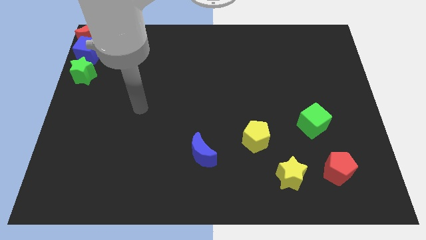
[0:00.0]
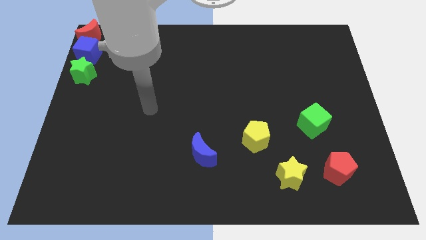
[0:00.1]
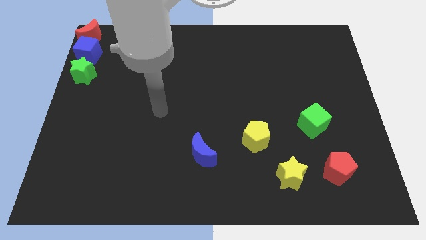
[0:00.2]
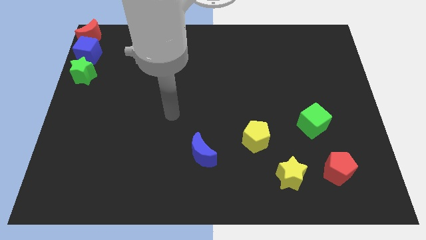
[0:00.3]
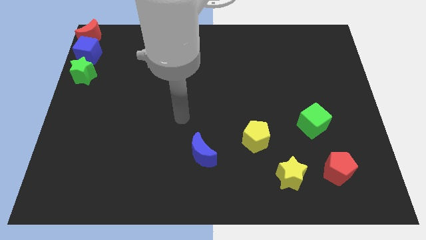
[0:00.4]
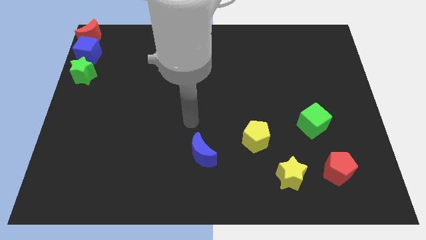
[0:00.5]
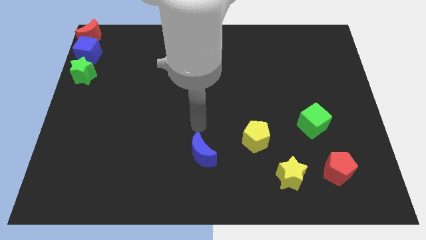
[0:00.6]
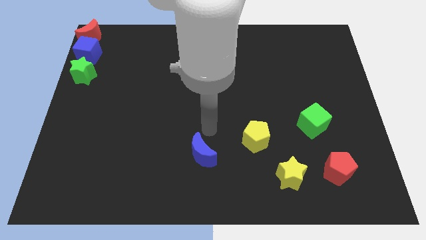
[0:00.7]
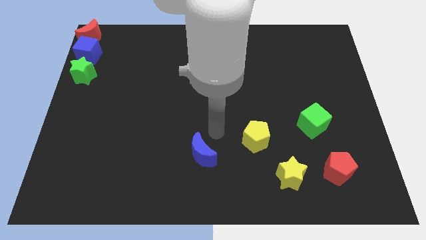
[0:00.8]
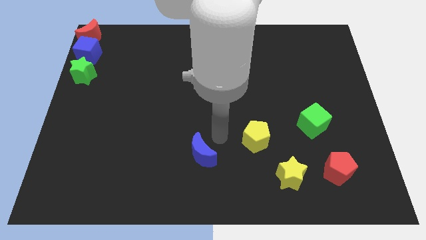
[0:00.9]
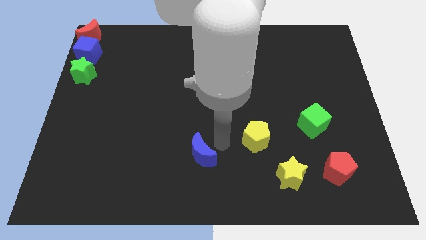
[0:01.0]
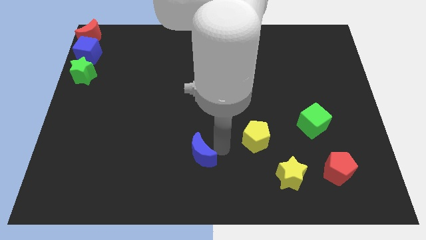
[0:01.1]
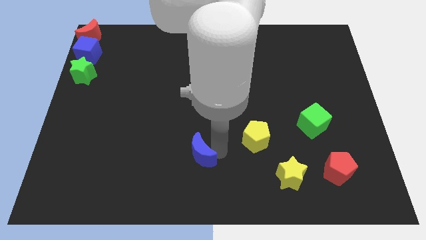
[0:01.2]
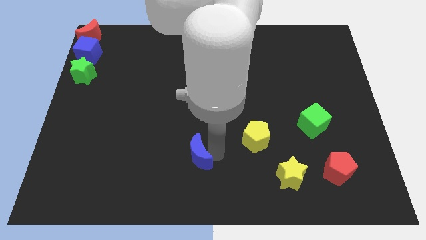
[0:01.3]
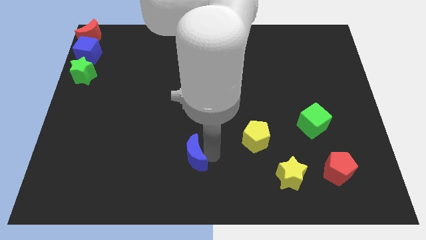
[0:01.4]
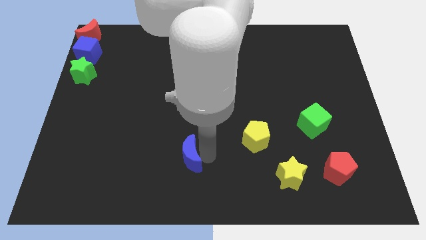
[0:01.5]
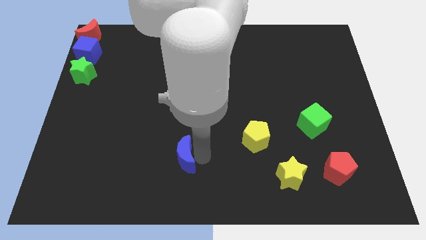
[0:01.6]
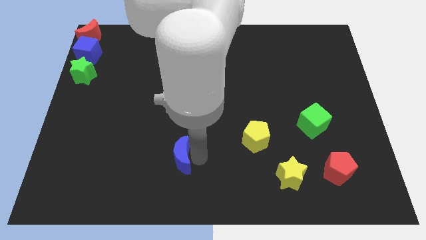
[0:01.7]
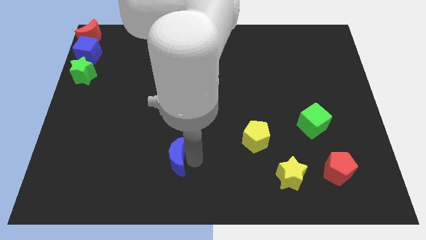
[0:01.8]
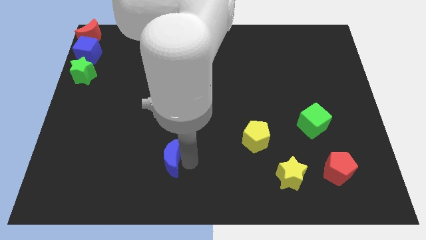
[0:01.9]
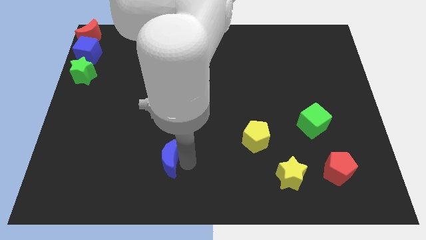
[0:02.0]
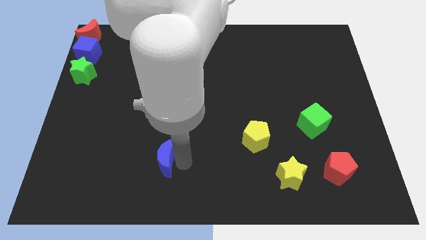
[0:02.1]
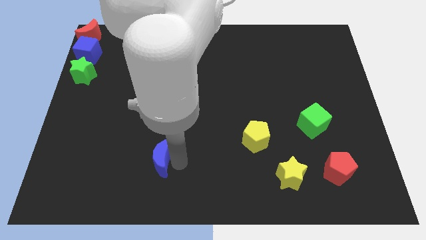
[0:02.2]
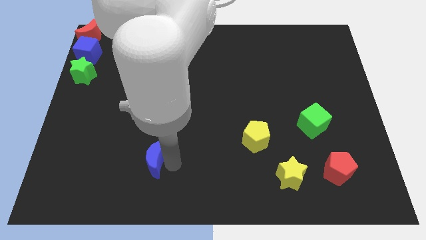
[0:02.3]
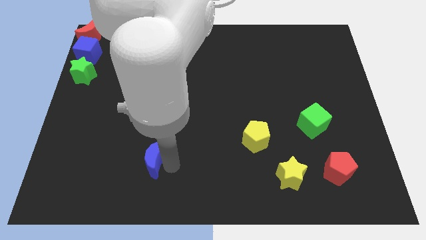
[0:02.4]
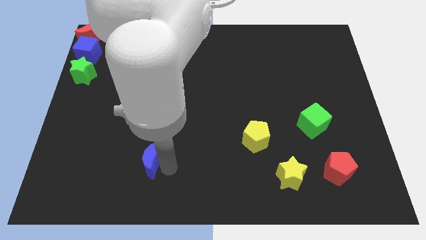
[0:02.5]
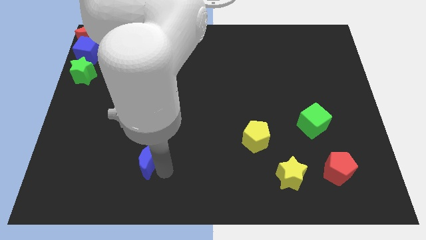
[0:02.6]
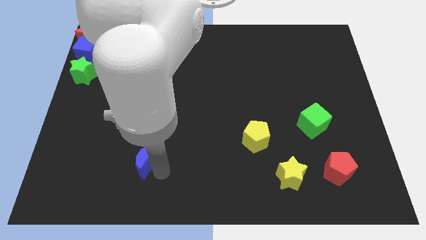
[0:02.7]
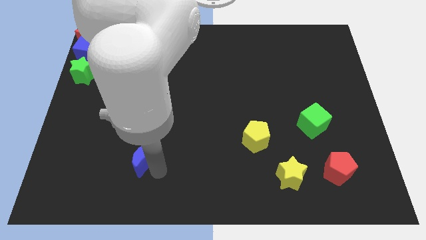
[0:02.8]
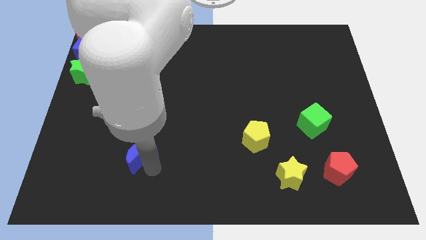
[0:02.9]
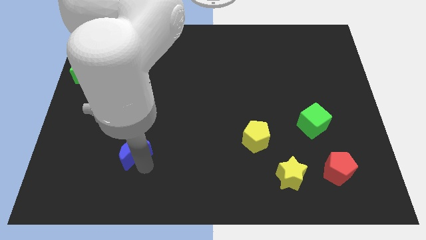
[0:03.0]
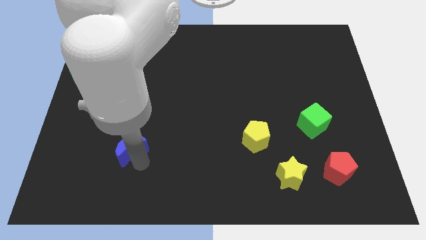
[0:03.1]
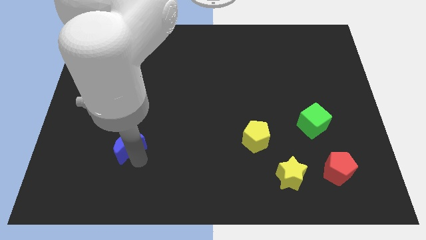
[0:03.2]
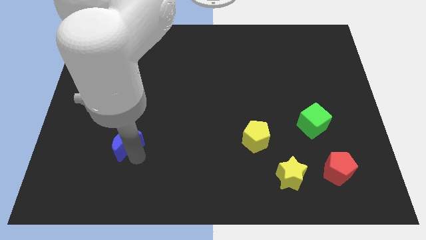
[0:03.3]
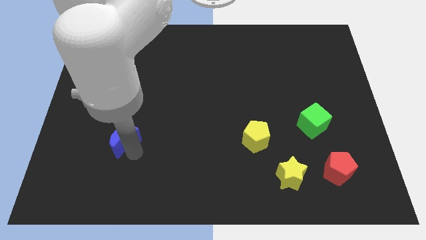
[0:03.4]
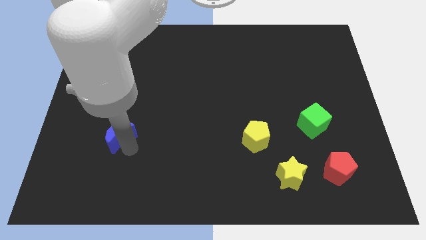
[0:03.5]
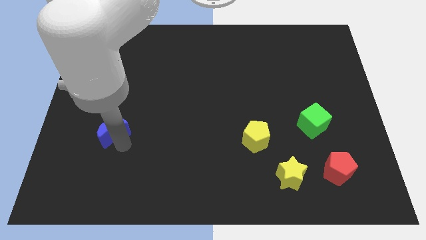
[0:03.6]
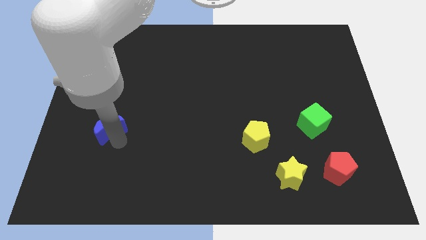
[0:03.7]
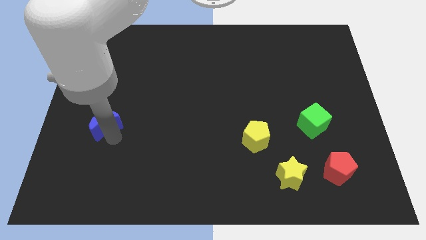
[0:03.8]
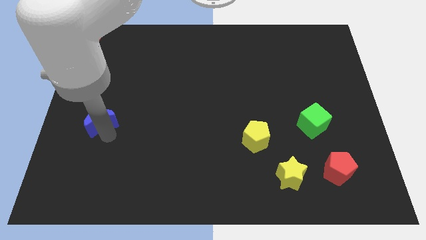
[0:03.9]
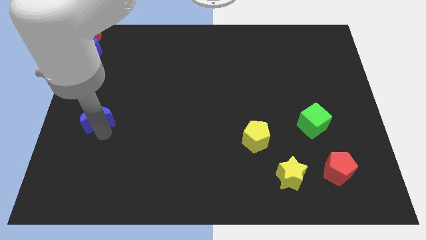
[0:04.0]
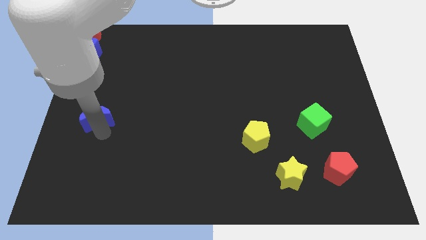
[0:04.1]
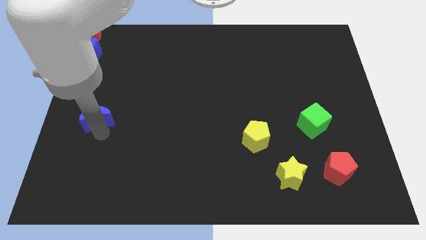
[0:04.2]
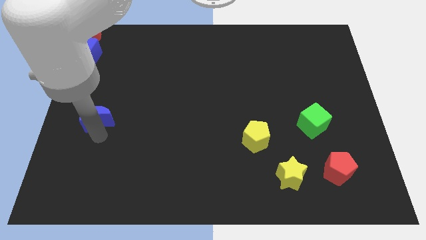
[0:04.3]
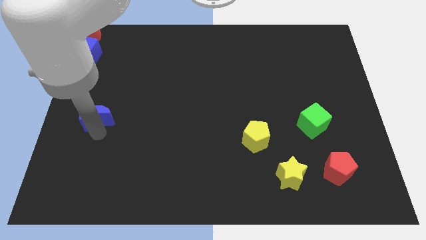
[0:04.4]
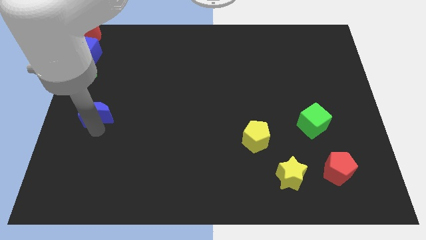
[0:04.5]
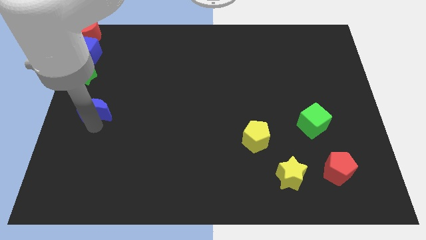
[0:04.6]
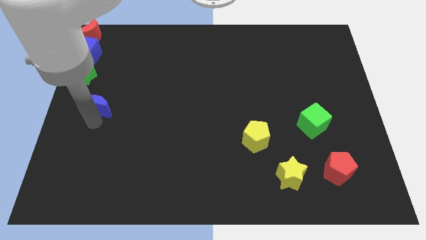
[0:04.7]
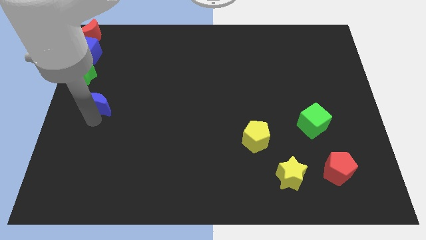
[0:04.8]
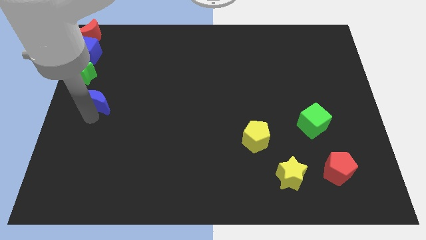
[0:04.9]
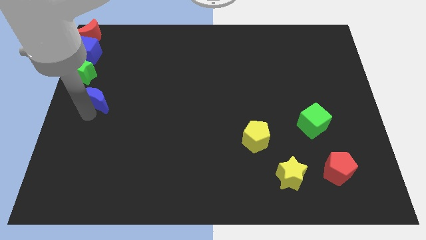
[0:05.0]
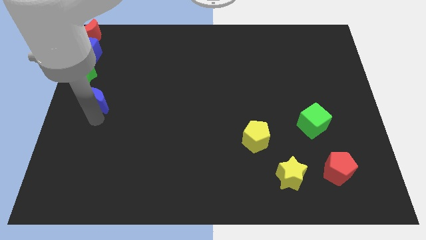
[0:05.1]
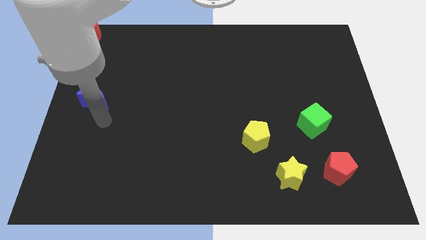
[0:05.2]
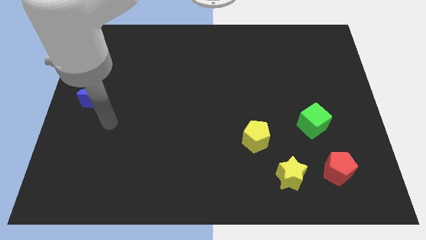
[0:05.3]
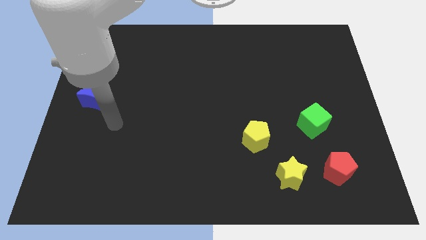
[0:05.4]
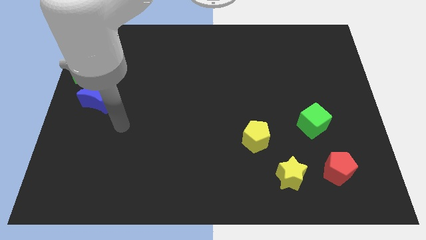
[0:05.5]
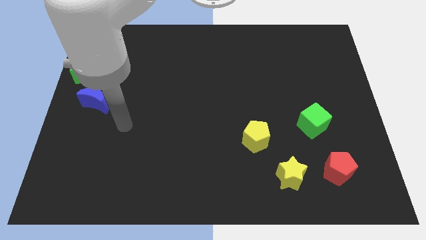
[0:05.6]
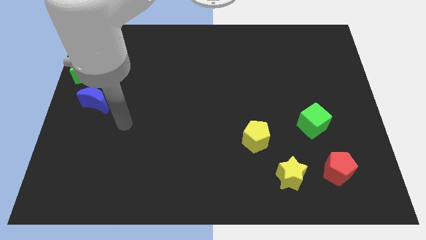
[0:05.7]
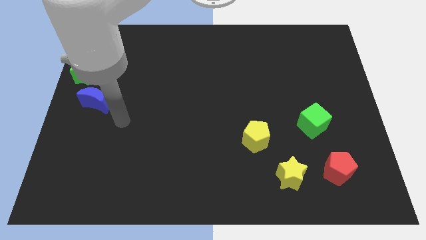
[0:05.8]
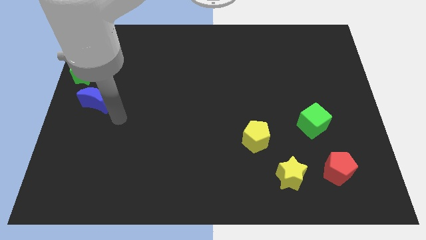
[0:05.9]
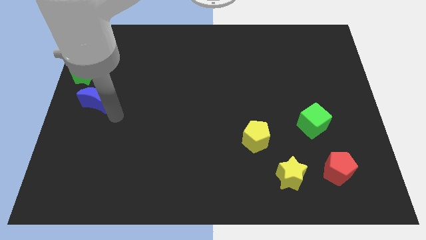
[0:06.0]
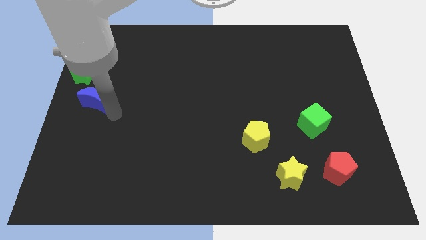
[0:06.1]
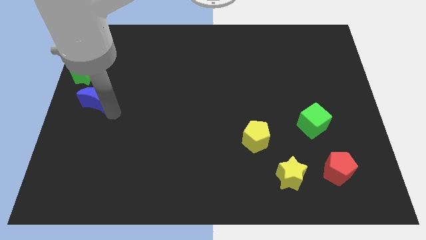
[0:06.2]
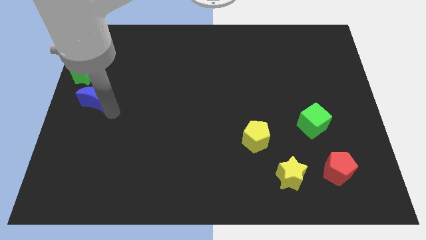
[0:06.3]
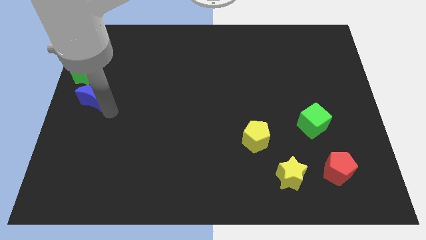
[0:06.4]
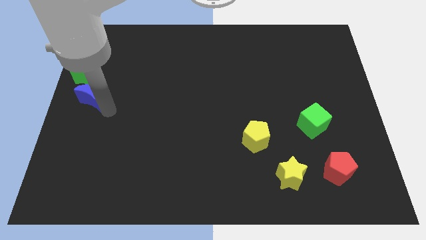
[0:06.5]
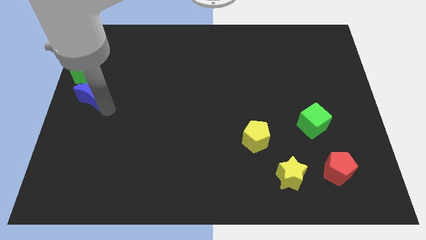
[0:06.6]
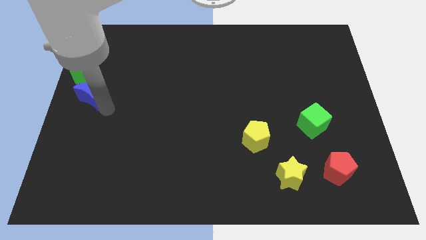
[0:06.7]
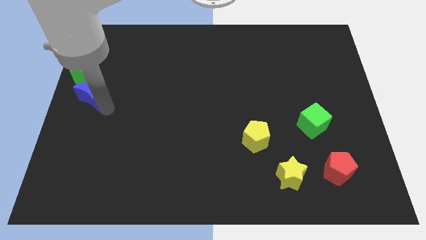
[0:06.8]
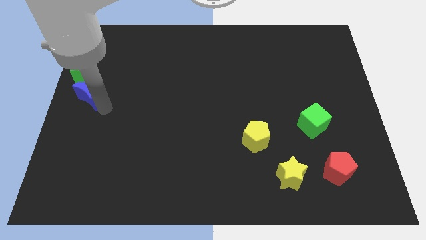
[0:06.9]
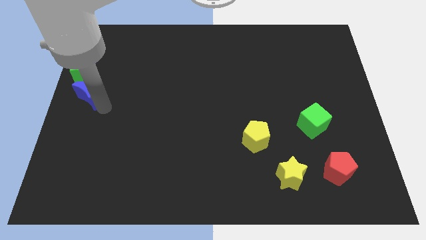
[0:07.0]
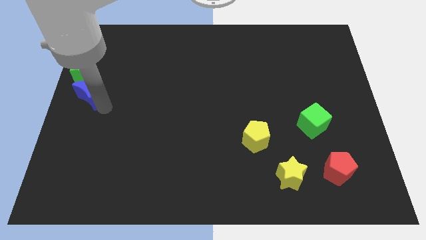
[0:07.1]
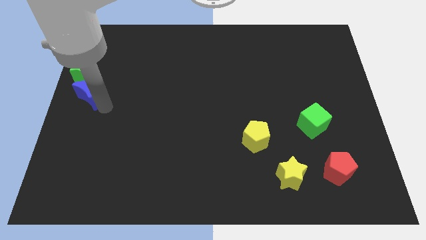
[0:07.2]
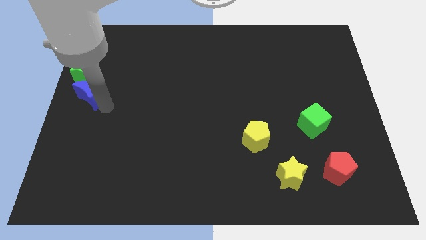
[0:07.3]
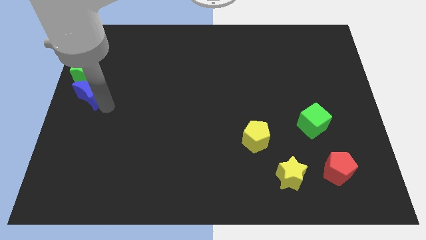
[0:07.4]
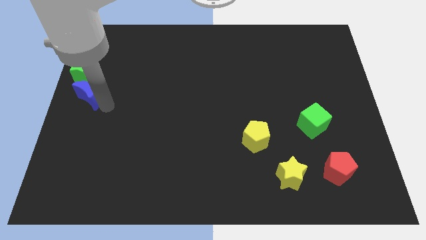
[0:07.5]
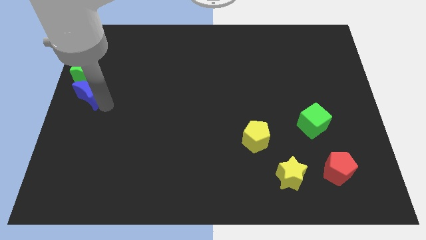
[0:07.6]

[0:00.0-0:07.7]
place the blue moon below the green star

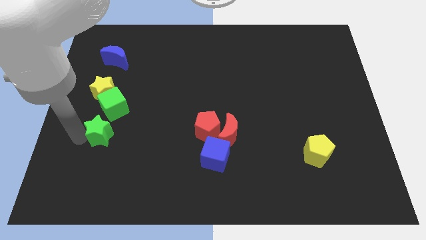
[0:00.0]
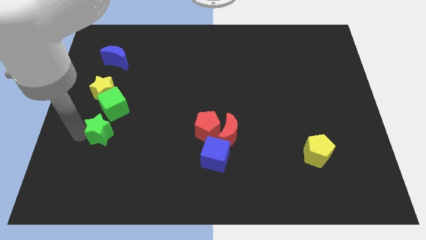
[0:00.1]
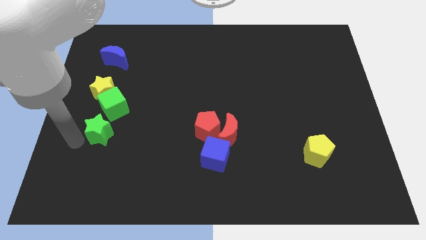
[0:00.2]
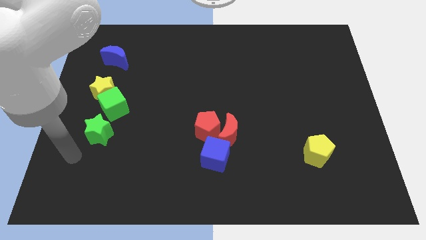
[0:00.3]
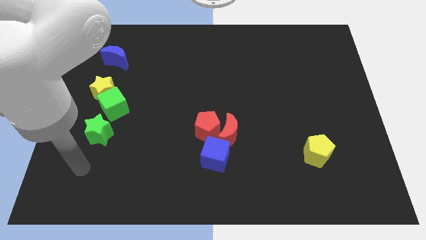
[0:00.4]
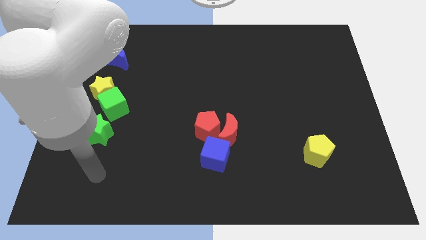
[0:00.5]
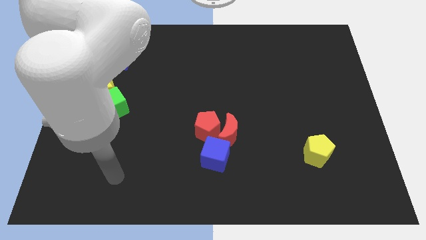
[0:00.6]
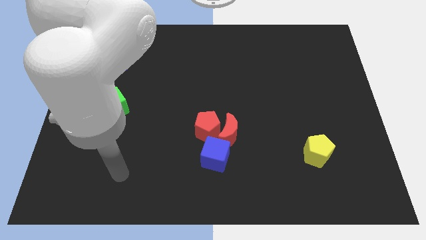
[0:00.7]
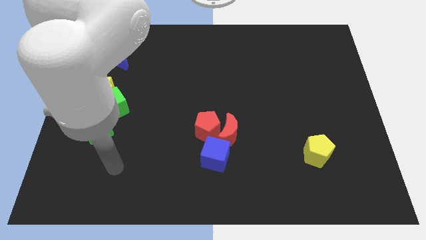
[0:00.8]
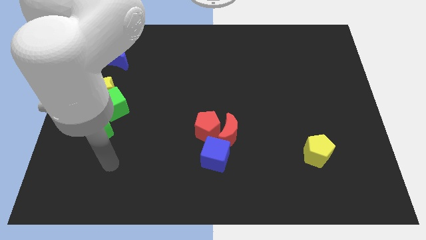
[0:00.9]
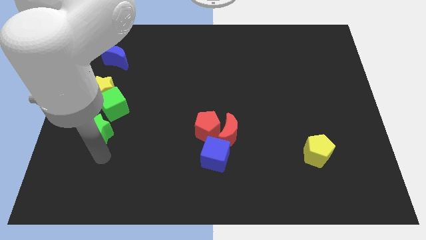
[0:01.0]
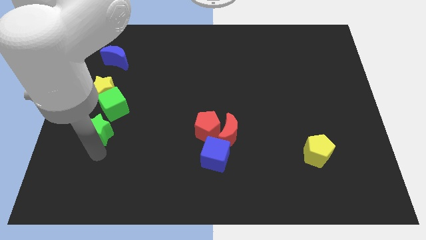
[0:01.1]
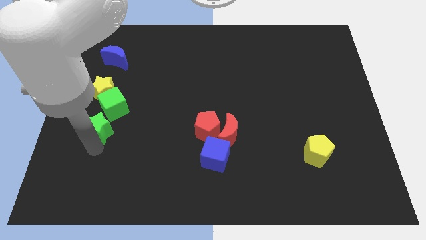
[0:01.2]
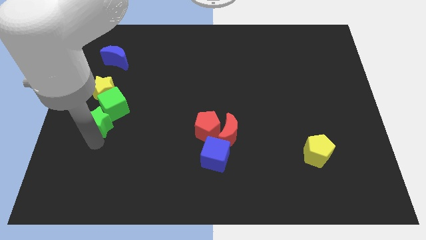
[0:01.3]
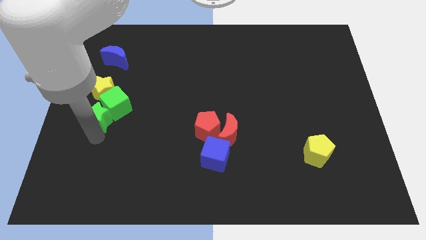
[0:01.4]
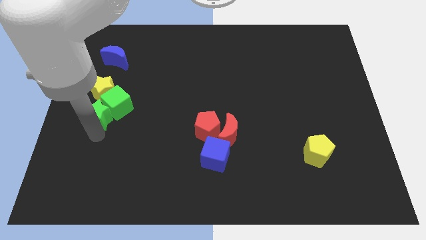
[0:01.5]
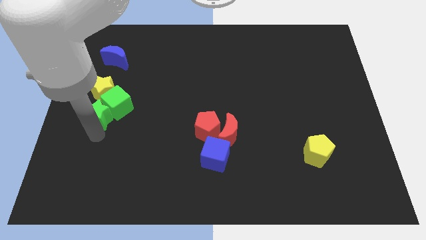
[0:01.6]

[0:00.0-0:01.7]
place the green star down the left side of the green cube
